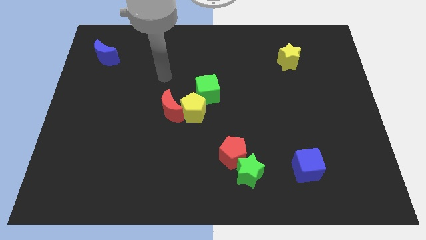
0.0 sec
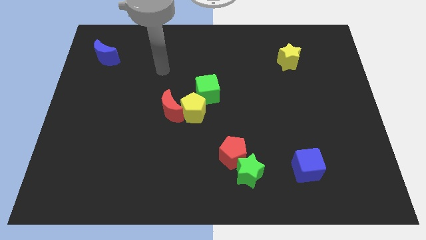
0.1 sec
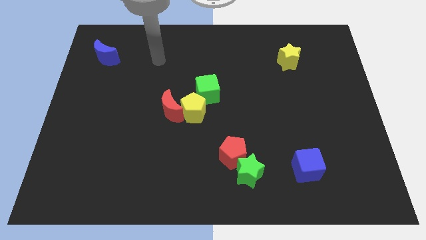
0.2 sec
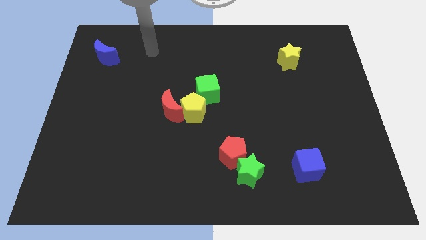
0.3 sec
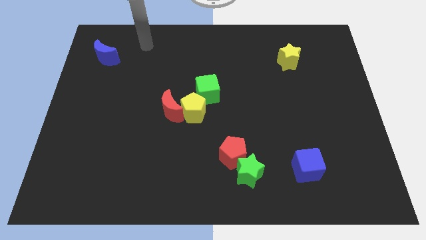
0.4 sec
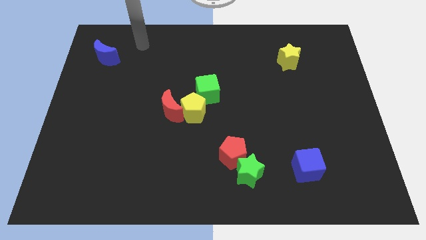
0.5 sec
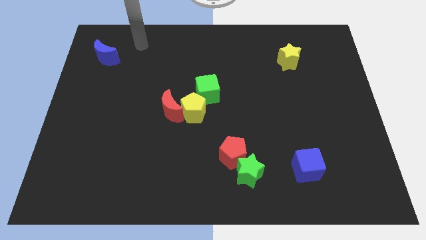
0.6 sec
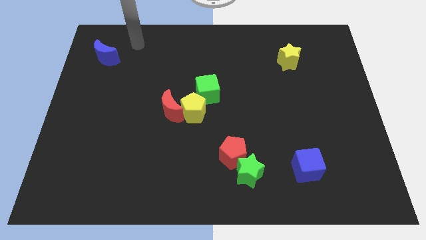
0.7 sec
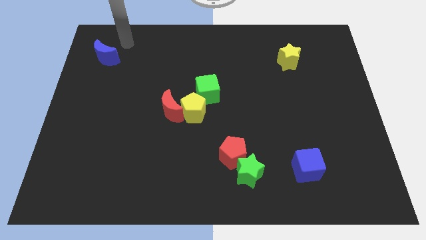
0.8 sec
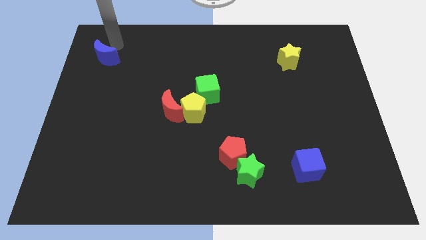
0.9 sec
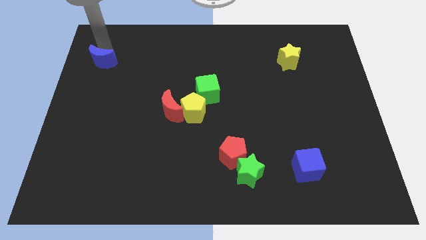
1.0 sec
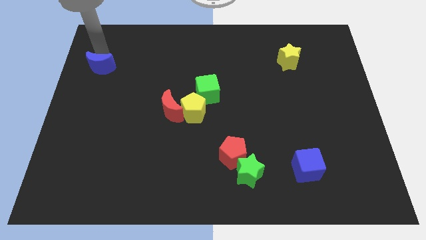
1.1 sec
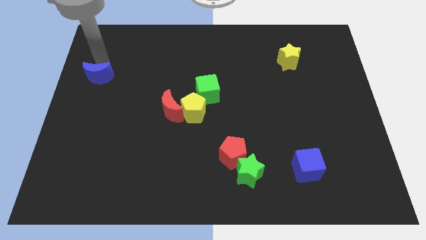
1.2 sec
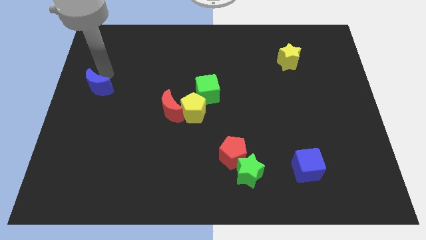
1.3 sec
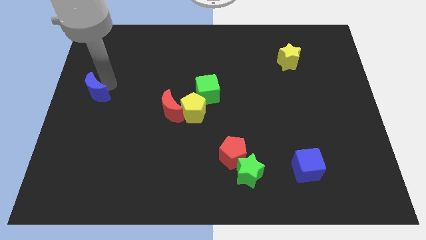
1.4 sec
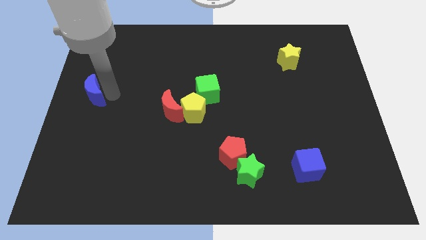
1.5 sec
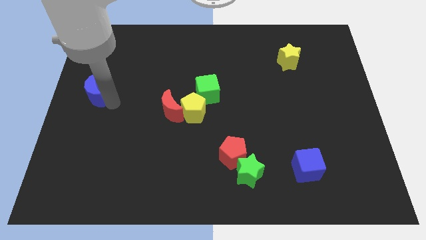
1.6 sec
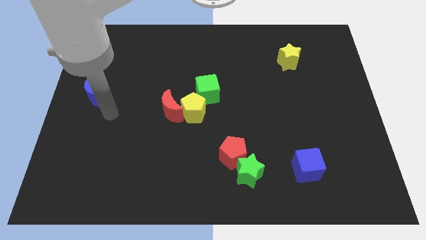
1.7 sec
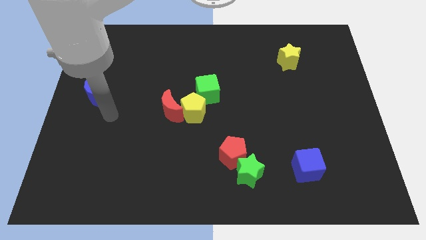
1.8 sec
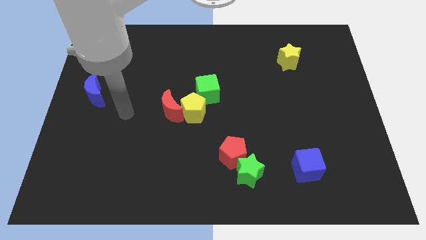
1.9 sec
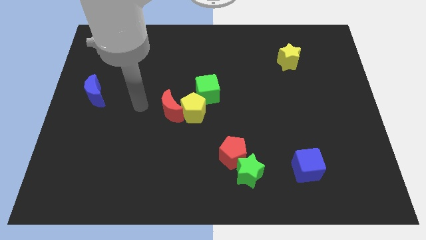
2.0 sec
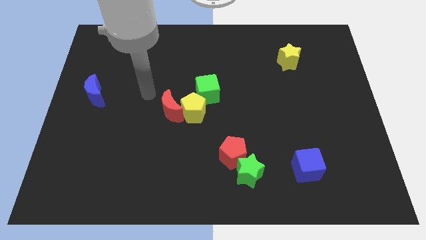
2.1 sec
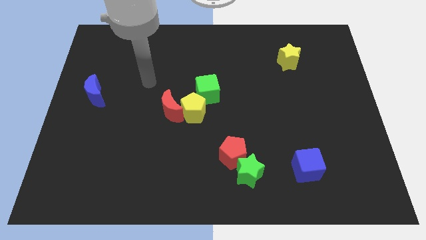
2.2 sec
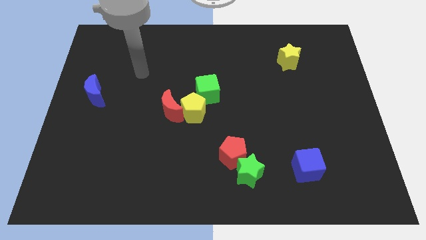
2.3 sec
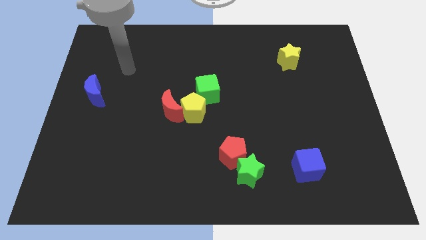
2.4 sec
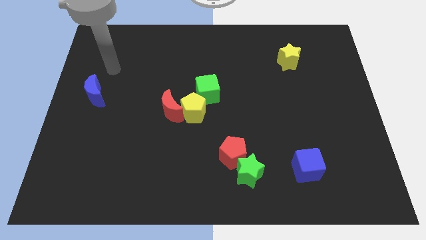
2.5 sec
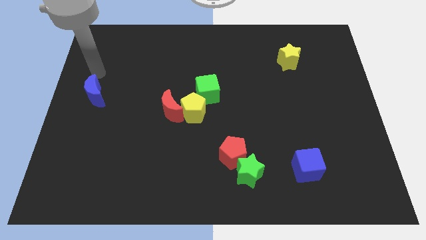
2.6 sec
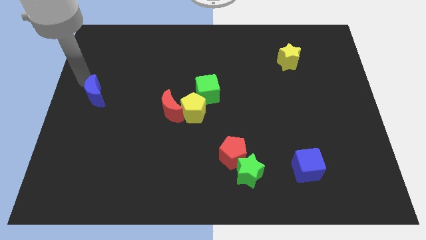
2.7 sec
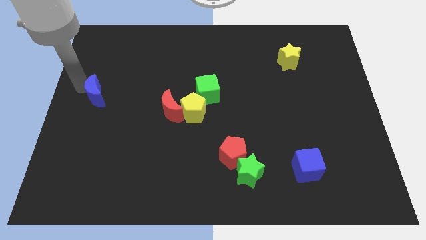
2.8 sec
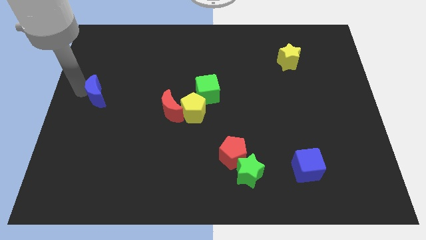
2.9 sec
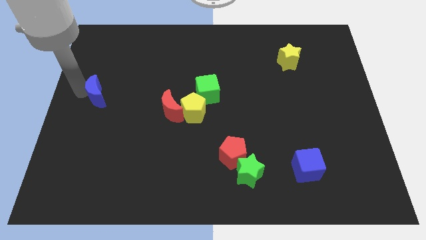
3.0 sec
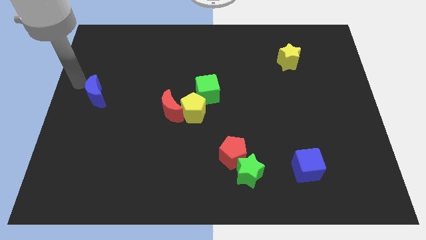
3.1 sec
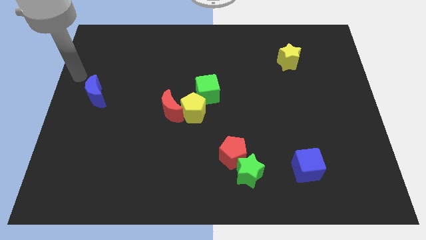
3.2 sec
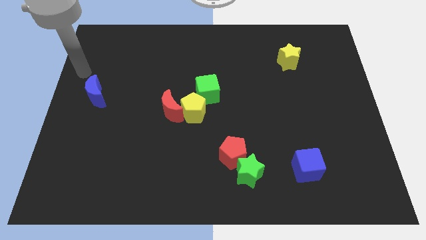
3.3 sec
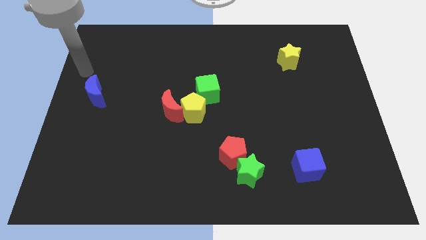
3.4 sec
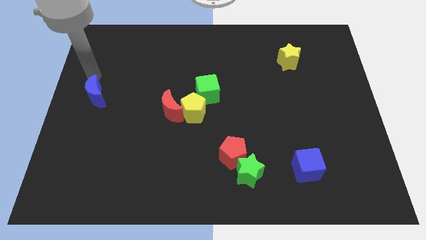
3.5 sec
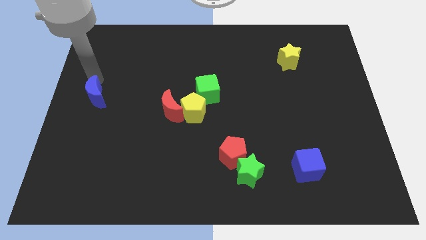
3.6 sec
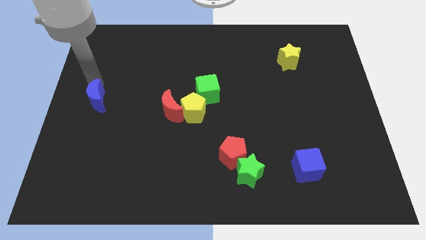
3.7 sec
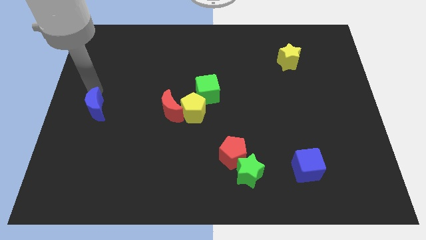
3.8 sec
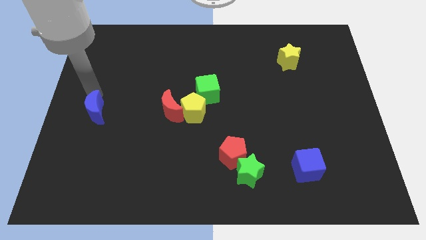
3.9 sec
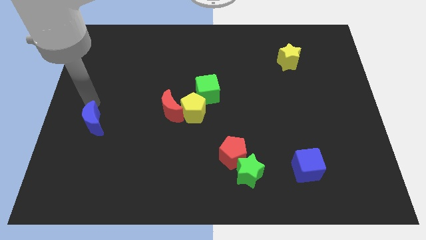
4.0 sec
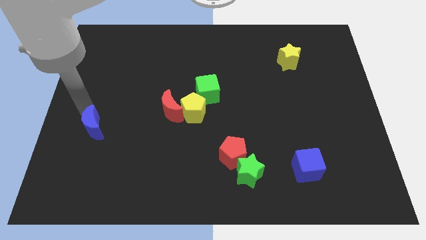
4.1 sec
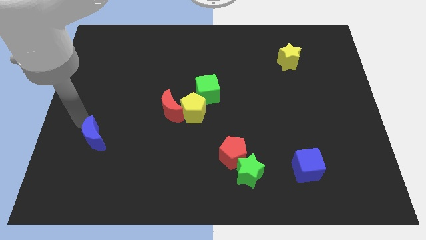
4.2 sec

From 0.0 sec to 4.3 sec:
drag the blue moon slightly downwards

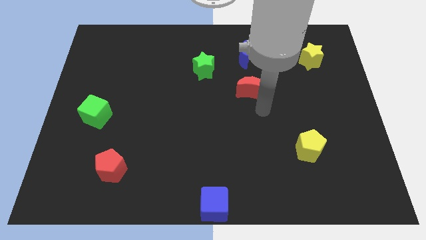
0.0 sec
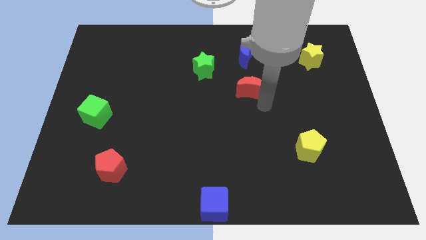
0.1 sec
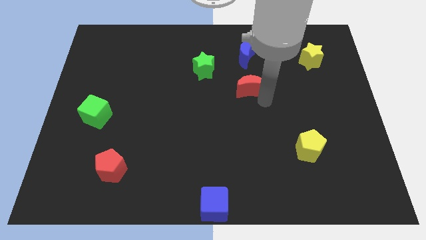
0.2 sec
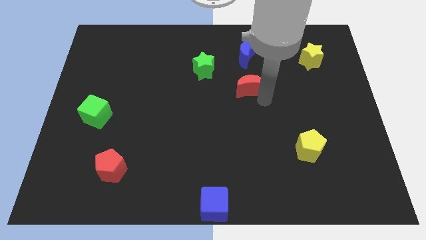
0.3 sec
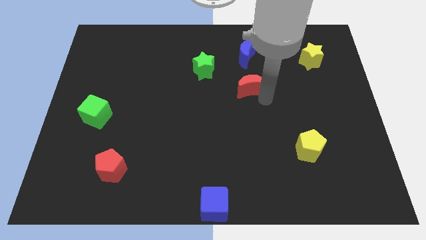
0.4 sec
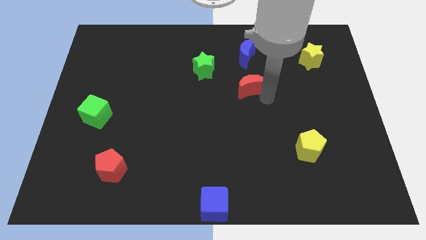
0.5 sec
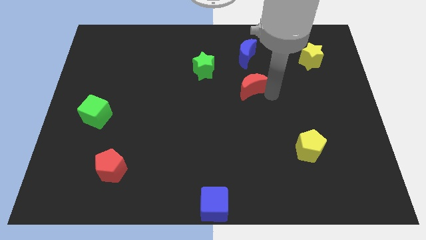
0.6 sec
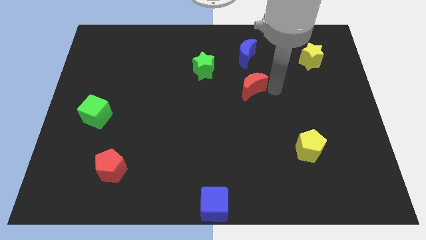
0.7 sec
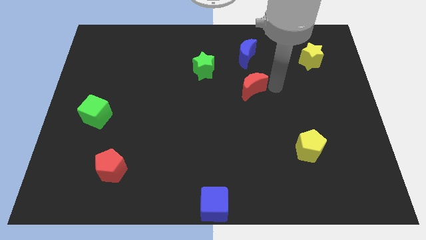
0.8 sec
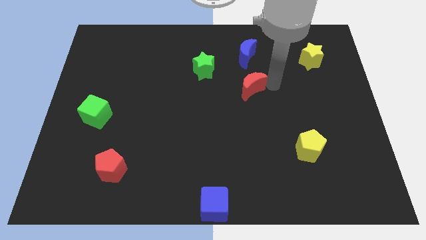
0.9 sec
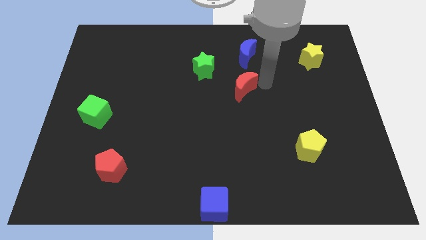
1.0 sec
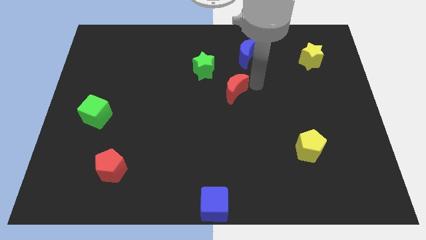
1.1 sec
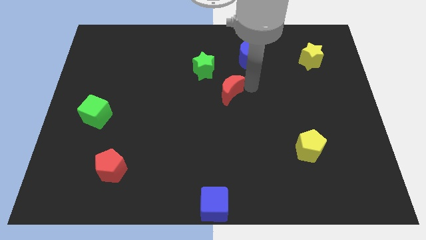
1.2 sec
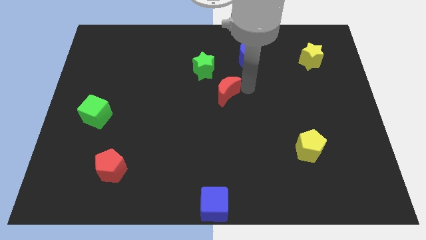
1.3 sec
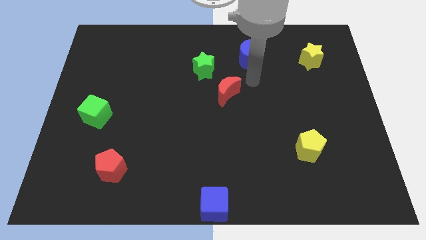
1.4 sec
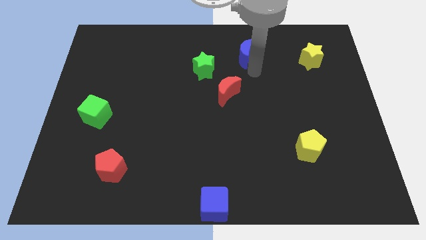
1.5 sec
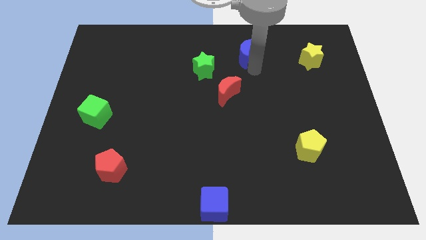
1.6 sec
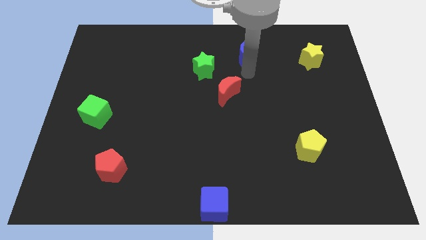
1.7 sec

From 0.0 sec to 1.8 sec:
push the red crescent close to the green star

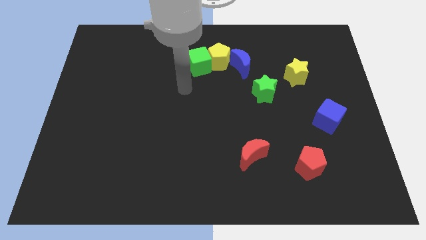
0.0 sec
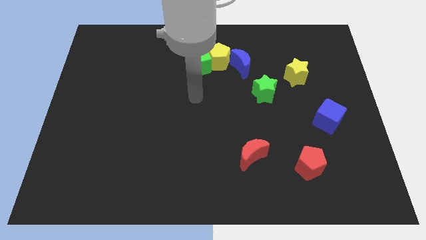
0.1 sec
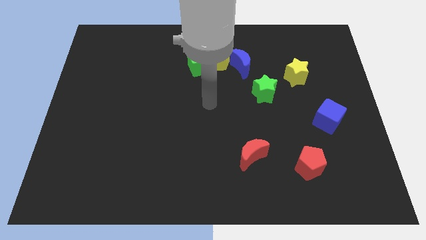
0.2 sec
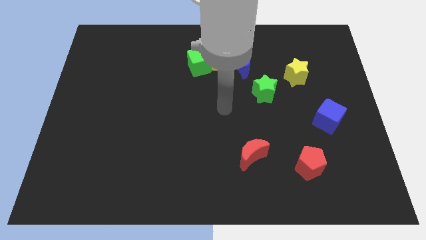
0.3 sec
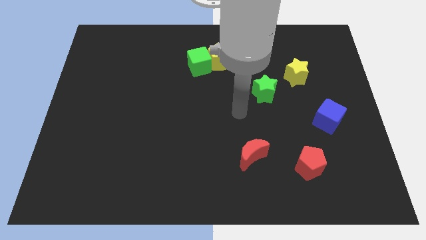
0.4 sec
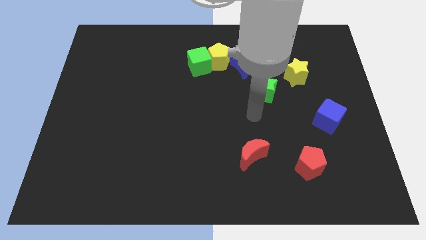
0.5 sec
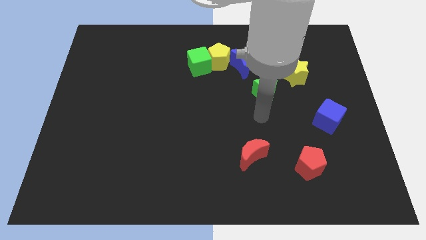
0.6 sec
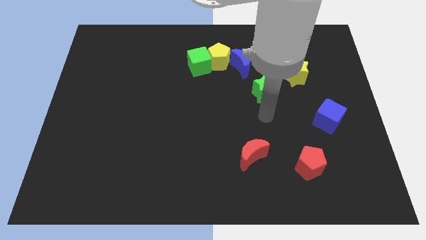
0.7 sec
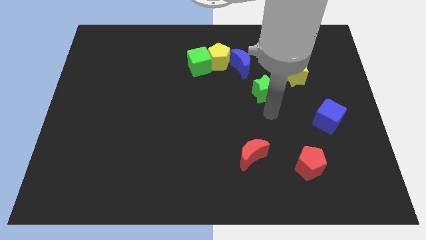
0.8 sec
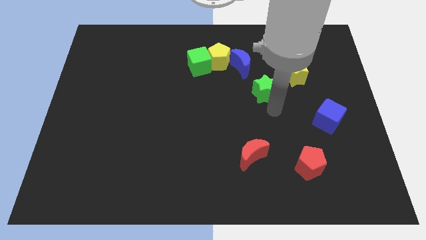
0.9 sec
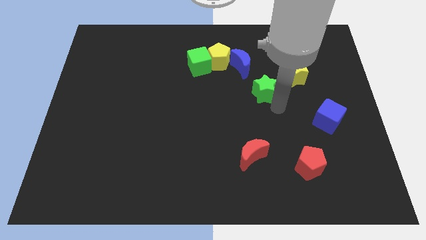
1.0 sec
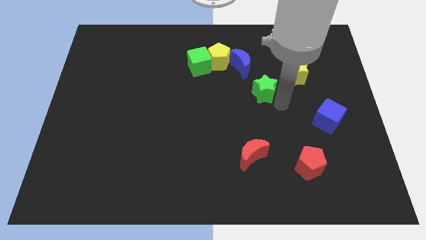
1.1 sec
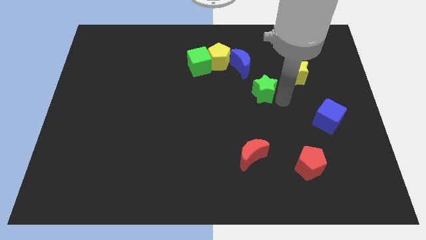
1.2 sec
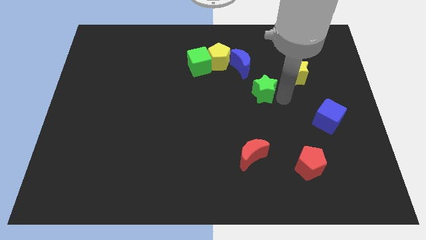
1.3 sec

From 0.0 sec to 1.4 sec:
move your arm to the right of the green star

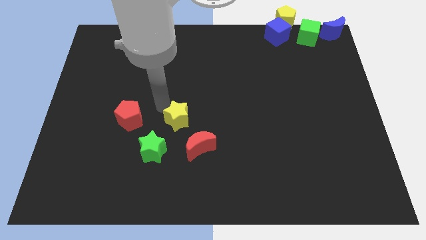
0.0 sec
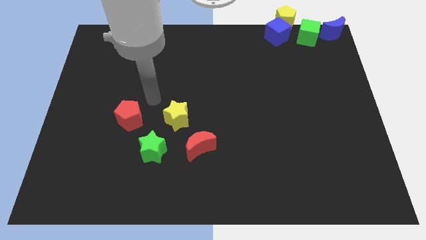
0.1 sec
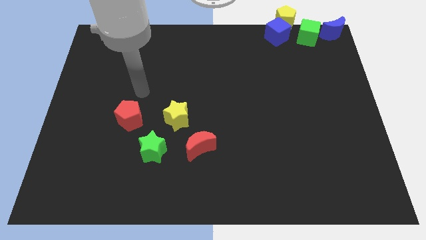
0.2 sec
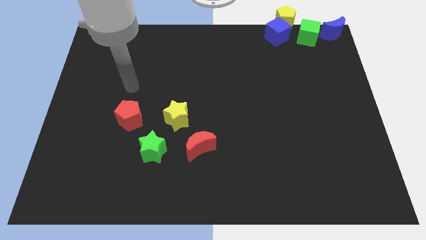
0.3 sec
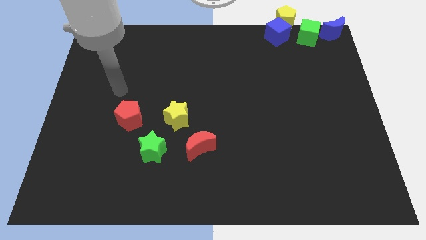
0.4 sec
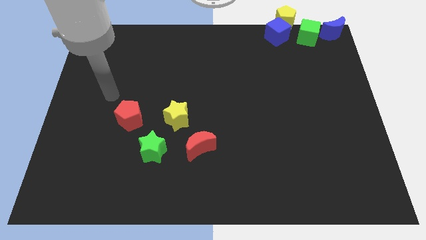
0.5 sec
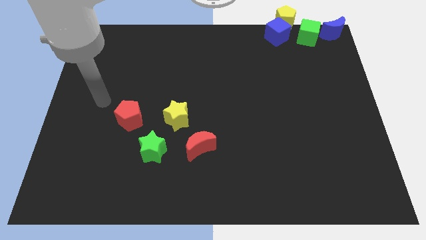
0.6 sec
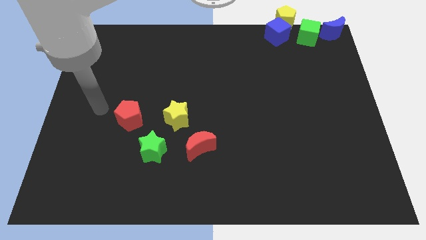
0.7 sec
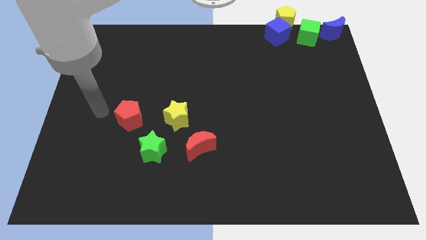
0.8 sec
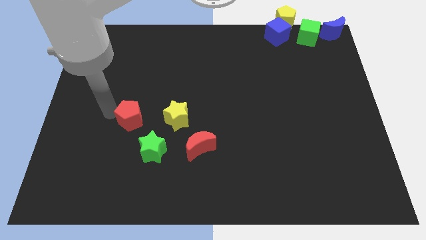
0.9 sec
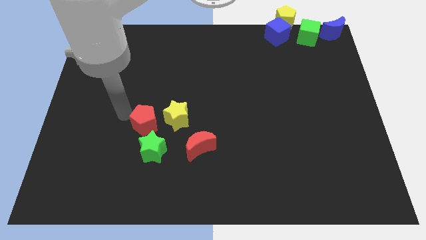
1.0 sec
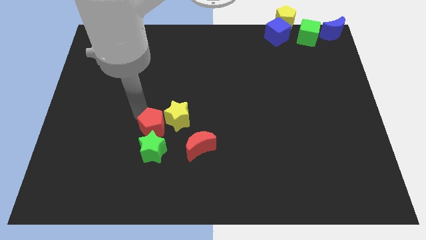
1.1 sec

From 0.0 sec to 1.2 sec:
move the red pentagon vertically above the green star

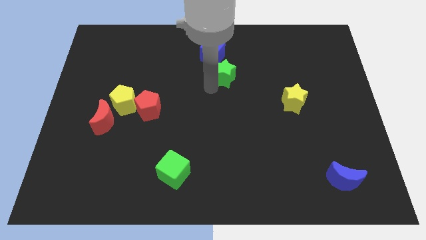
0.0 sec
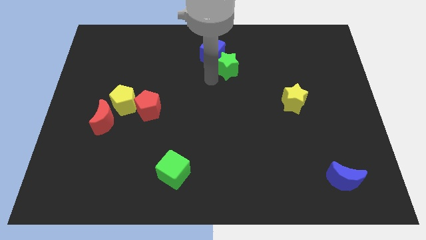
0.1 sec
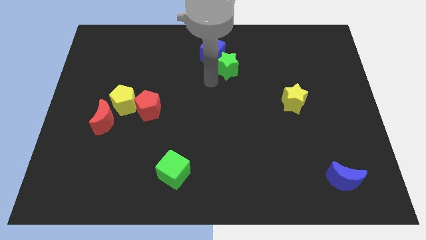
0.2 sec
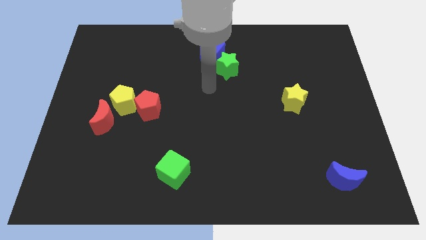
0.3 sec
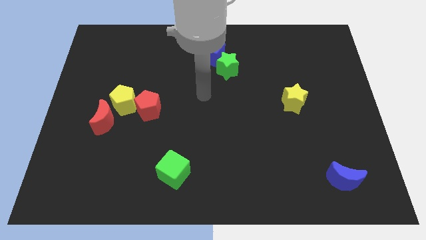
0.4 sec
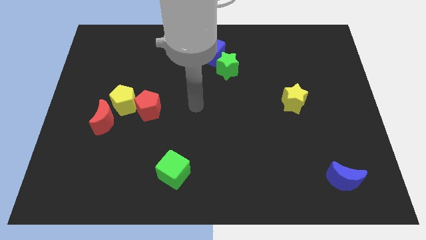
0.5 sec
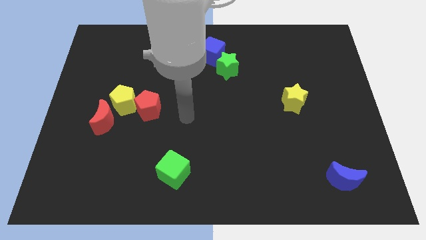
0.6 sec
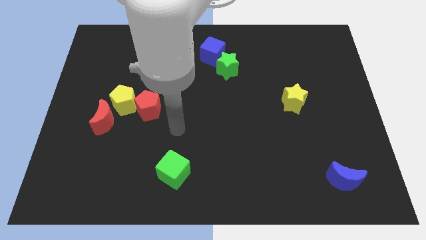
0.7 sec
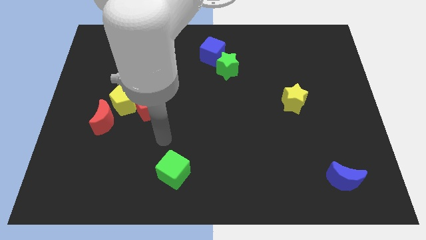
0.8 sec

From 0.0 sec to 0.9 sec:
place the green star close to the blue cube
